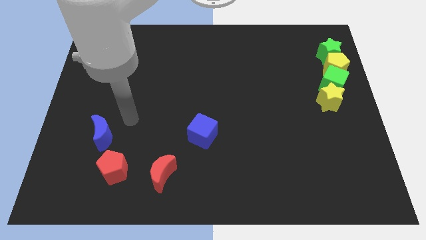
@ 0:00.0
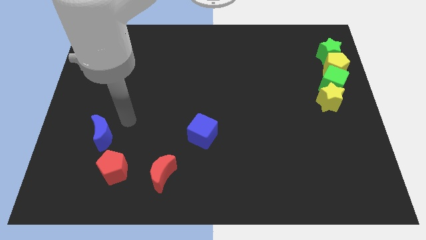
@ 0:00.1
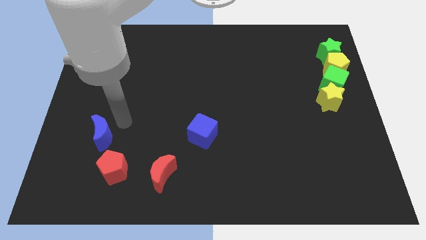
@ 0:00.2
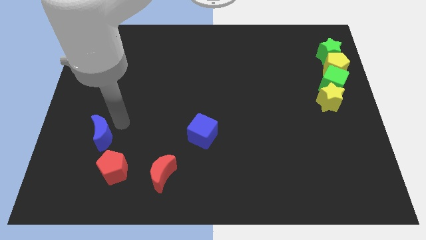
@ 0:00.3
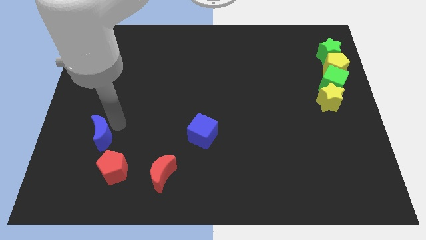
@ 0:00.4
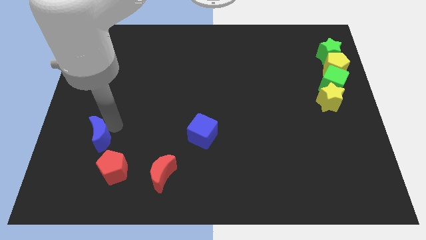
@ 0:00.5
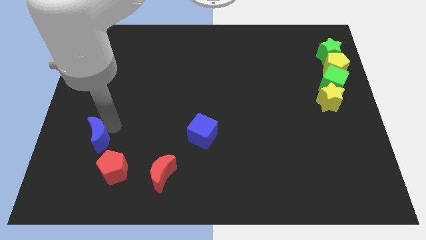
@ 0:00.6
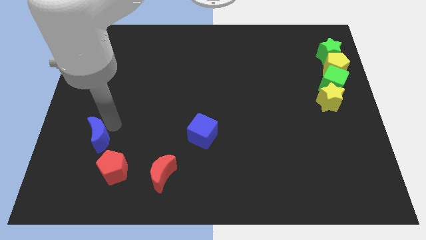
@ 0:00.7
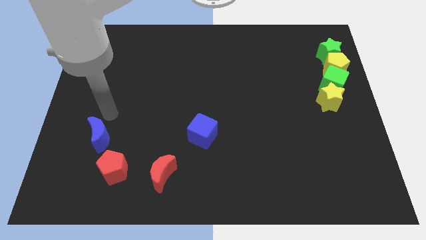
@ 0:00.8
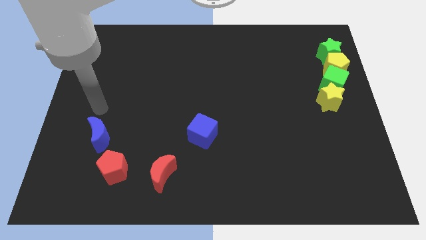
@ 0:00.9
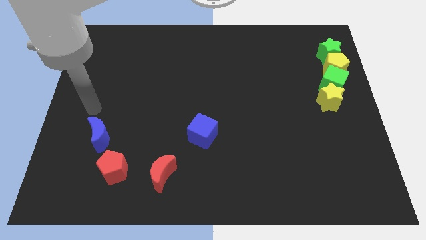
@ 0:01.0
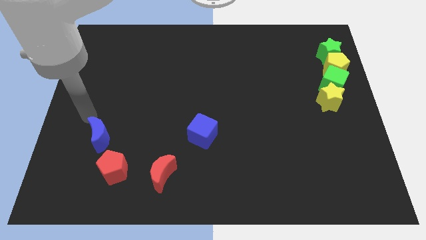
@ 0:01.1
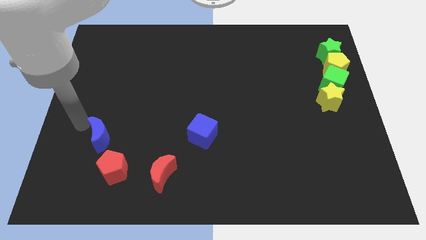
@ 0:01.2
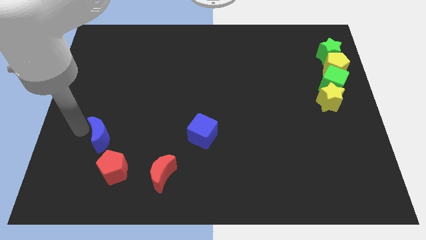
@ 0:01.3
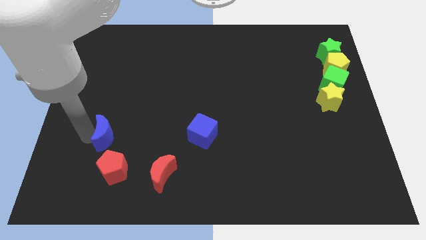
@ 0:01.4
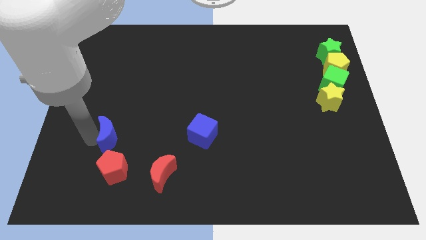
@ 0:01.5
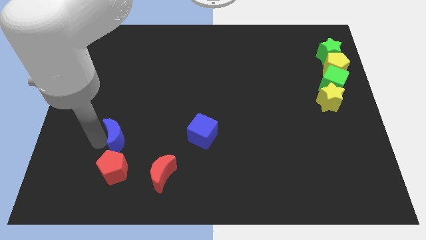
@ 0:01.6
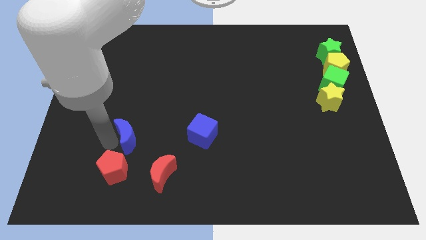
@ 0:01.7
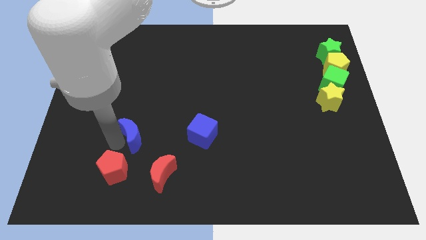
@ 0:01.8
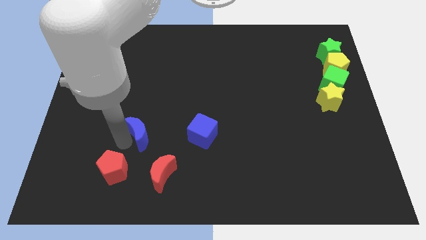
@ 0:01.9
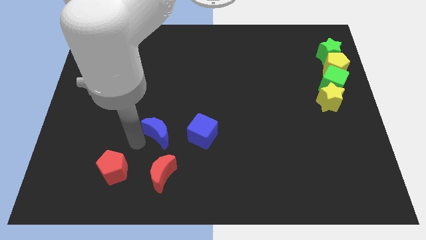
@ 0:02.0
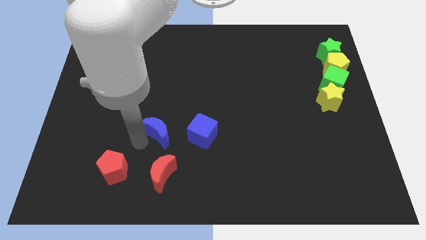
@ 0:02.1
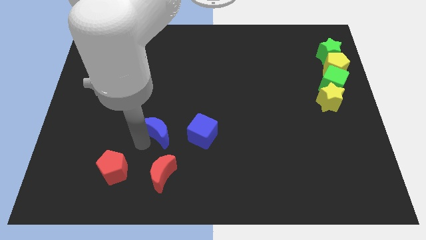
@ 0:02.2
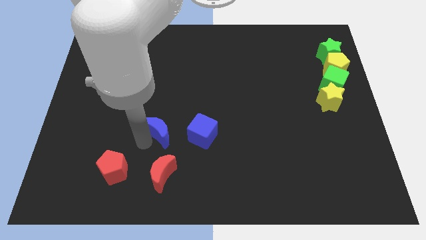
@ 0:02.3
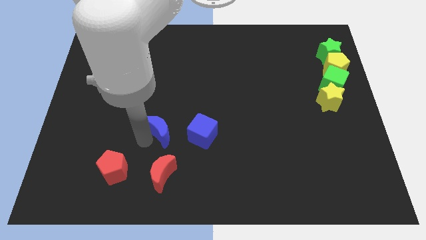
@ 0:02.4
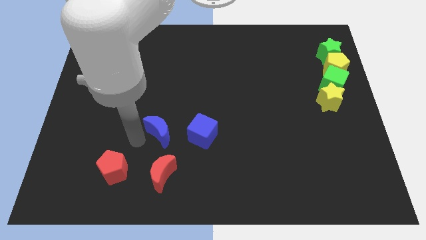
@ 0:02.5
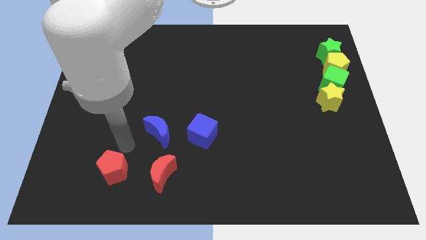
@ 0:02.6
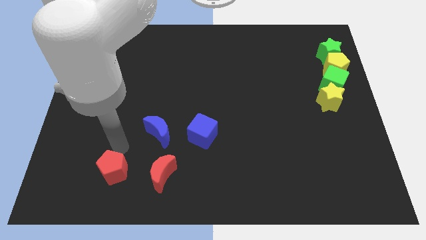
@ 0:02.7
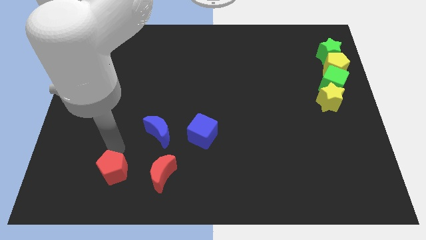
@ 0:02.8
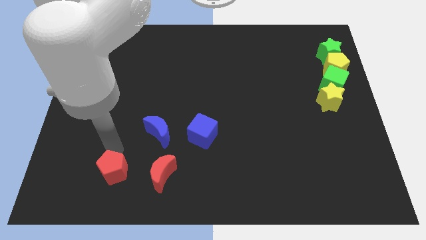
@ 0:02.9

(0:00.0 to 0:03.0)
move the blue crescent towards the blue cube

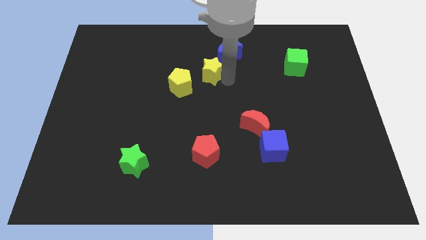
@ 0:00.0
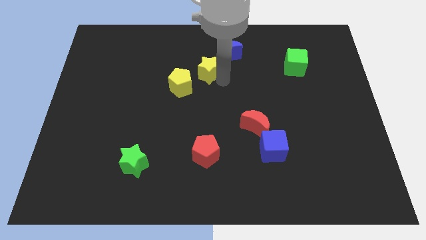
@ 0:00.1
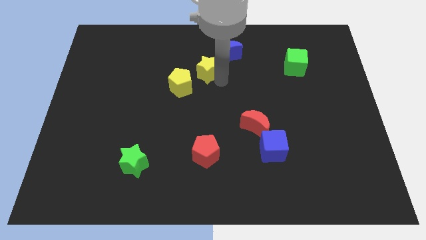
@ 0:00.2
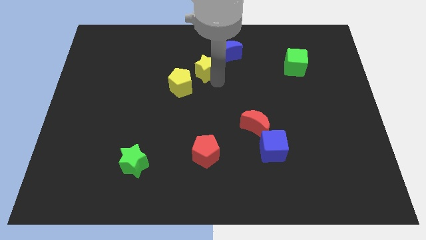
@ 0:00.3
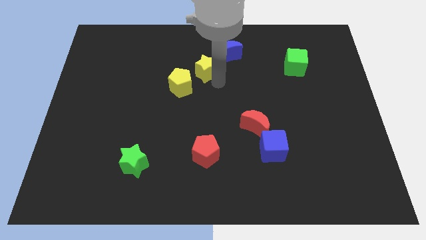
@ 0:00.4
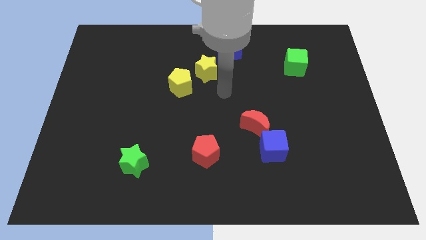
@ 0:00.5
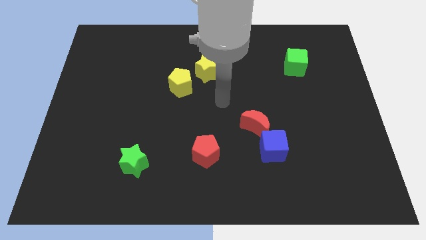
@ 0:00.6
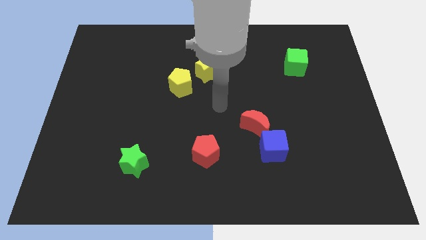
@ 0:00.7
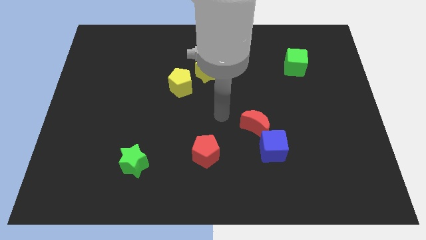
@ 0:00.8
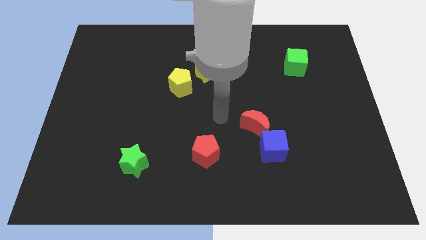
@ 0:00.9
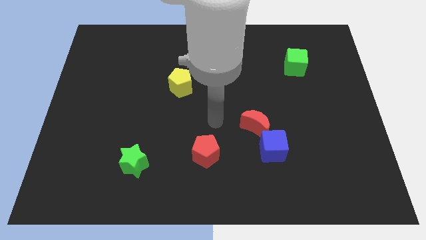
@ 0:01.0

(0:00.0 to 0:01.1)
place the yellow star diagonally right to the yellow pentagon

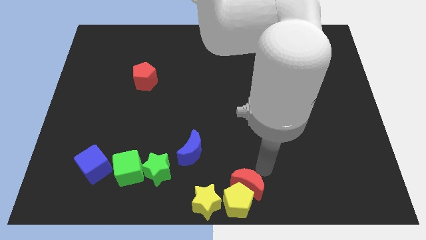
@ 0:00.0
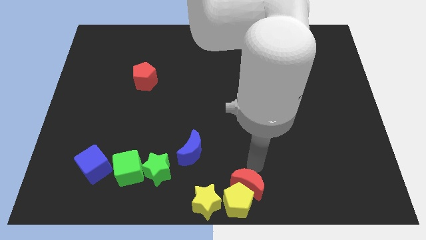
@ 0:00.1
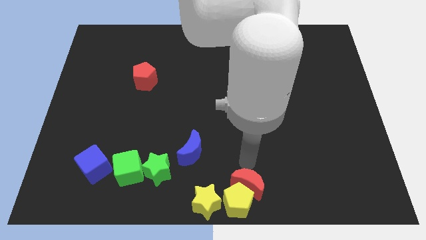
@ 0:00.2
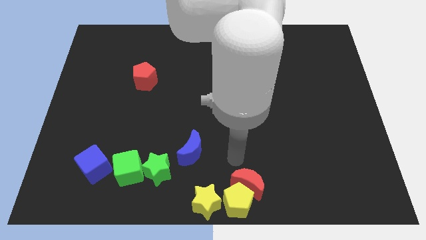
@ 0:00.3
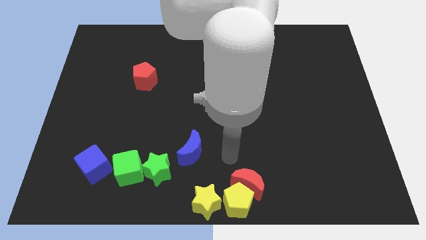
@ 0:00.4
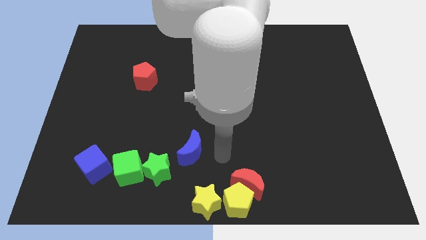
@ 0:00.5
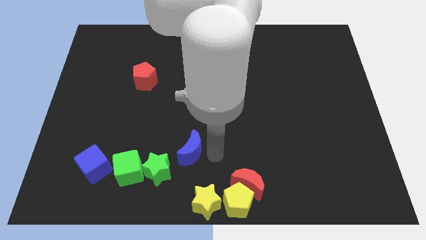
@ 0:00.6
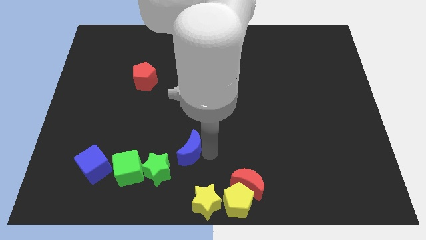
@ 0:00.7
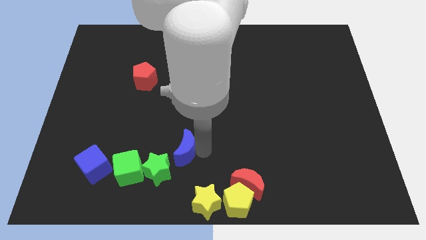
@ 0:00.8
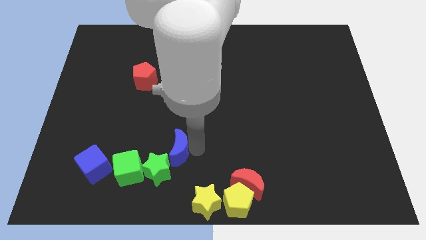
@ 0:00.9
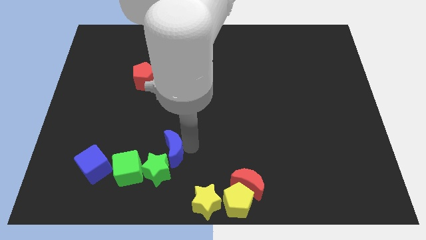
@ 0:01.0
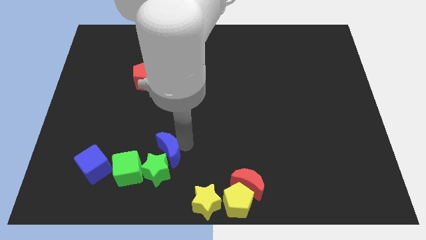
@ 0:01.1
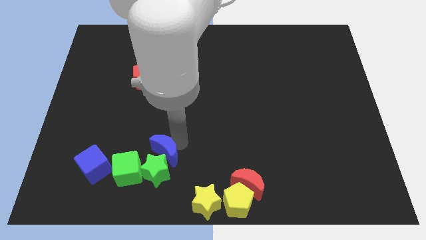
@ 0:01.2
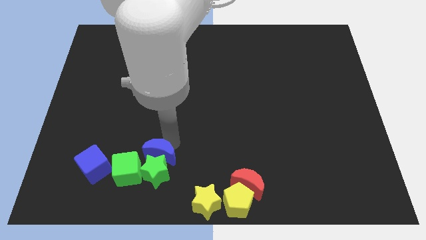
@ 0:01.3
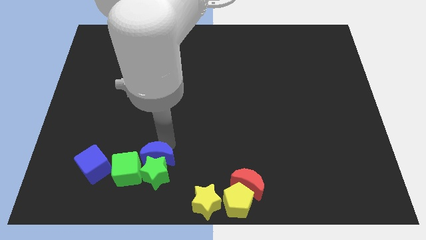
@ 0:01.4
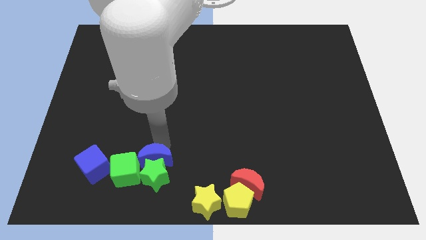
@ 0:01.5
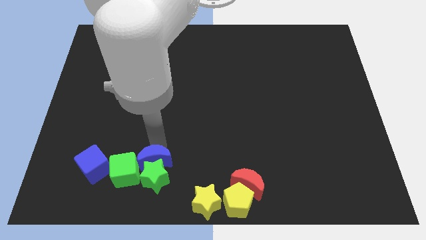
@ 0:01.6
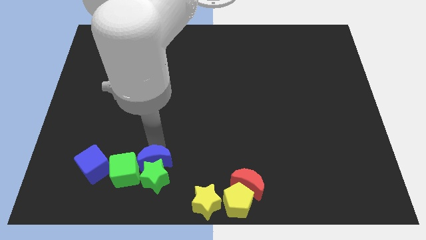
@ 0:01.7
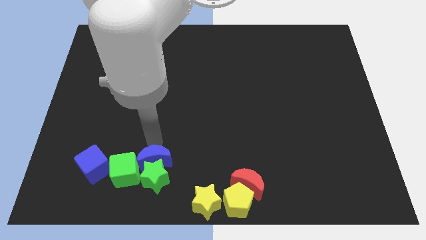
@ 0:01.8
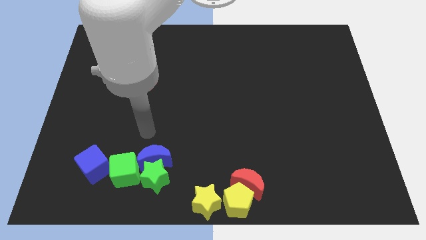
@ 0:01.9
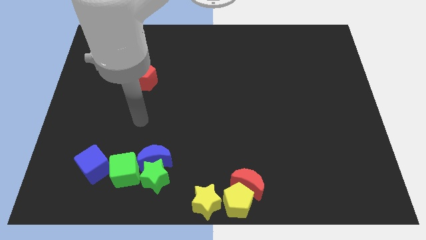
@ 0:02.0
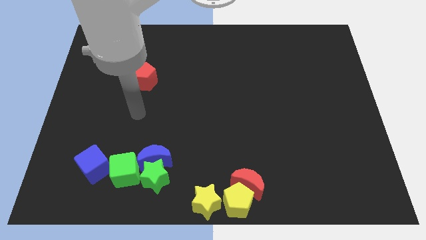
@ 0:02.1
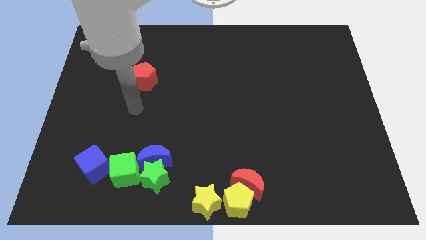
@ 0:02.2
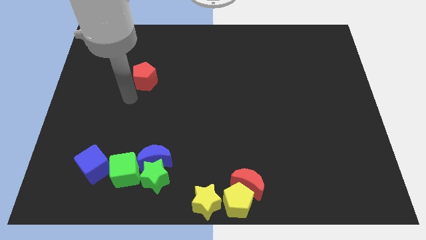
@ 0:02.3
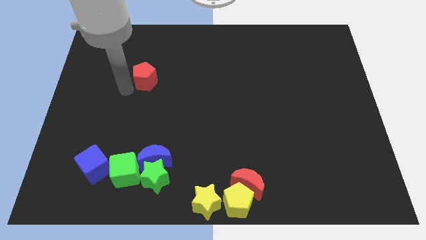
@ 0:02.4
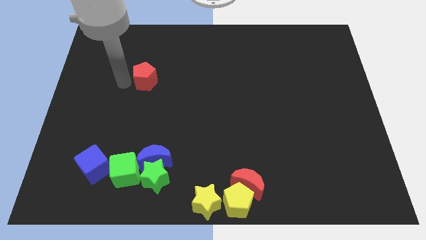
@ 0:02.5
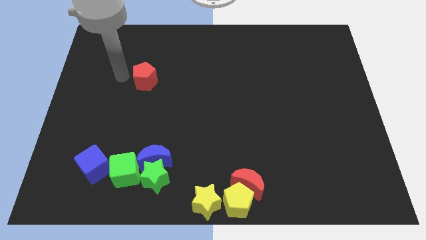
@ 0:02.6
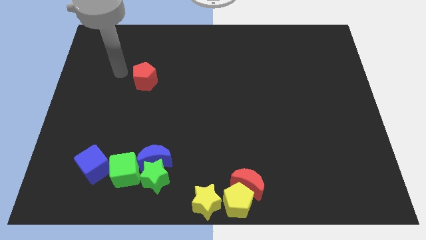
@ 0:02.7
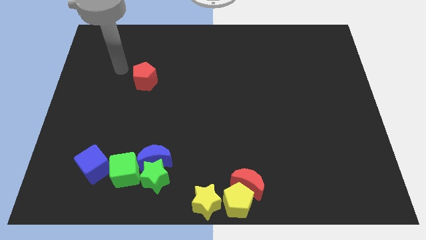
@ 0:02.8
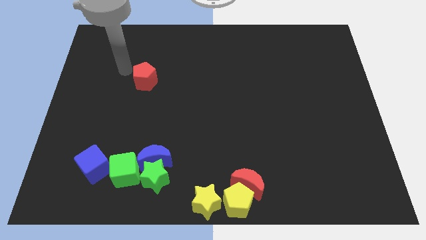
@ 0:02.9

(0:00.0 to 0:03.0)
push the blue moon to top right of green cube

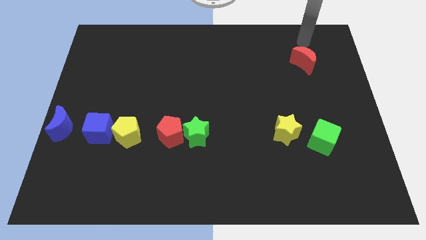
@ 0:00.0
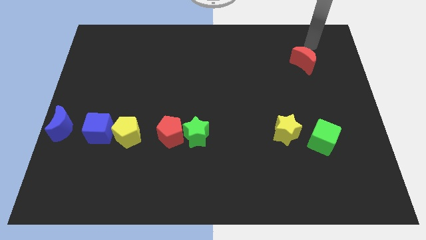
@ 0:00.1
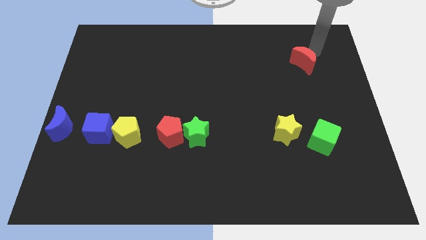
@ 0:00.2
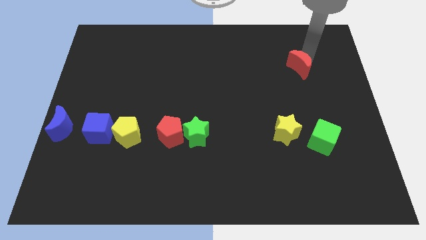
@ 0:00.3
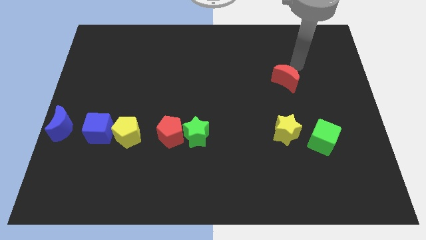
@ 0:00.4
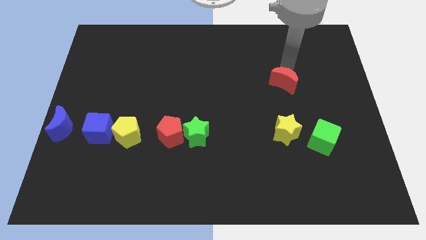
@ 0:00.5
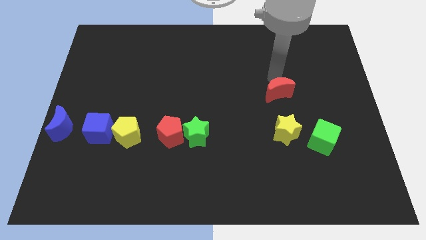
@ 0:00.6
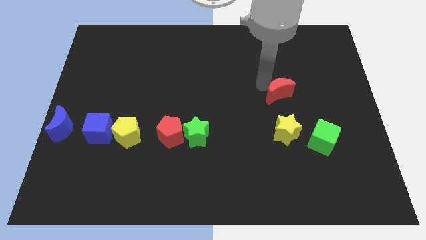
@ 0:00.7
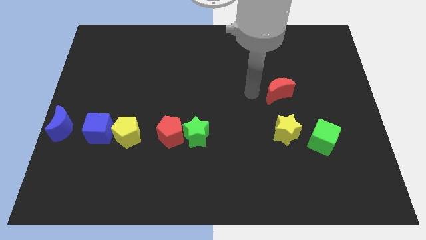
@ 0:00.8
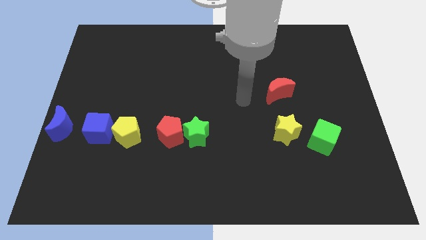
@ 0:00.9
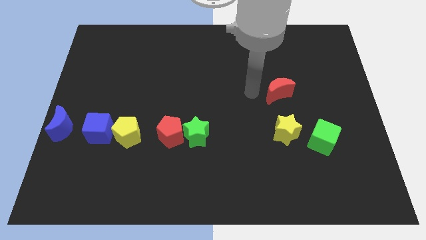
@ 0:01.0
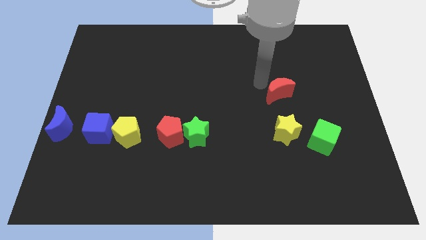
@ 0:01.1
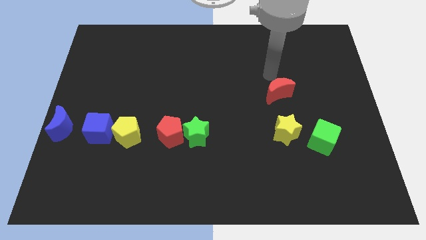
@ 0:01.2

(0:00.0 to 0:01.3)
push the red moon to the top side of the yellow star

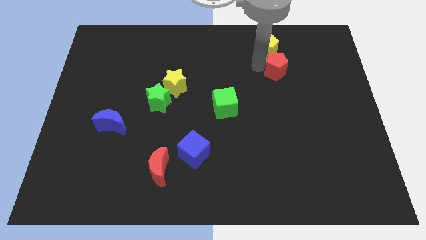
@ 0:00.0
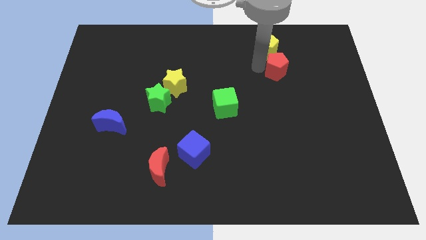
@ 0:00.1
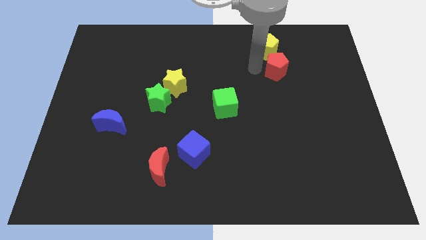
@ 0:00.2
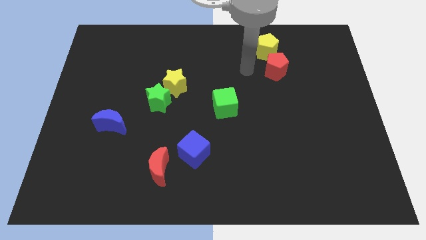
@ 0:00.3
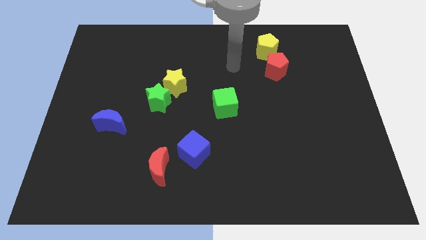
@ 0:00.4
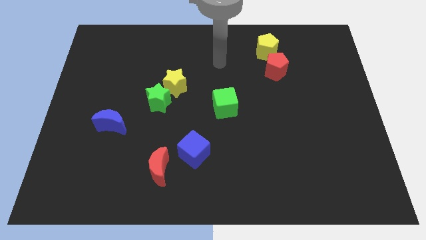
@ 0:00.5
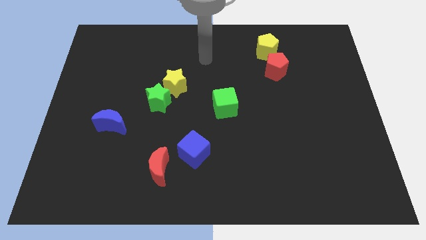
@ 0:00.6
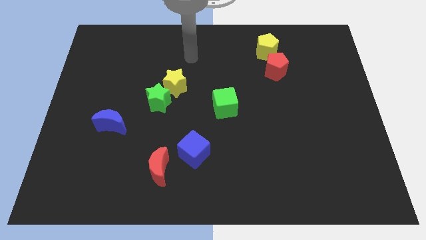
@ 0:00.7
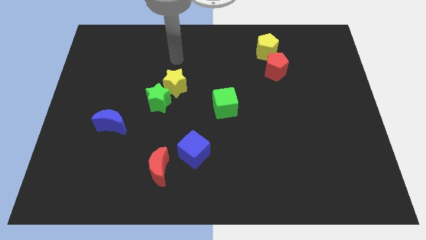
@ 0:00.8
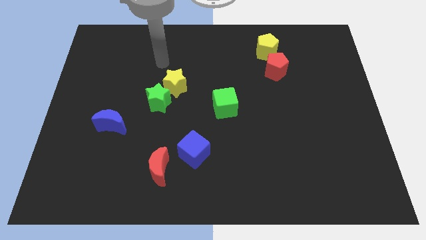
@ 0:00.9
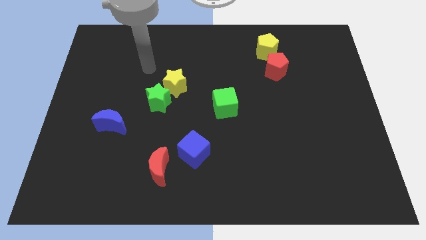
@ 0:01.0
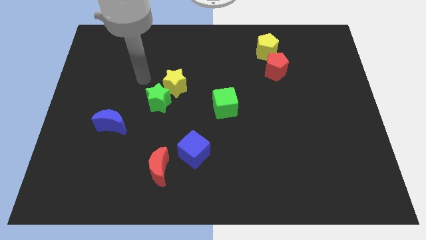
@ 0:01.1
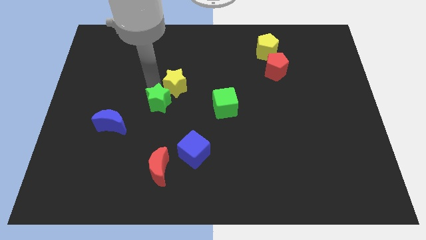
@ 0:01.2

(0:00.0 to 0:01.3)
move the arm away from the red pentagon
